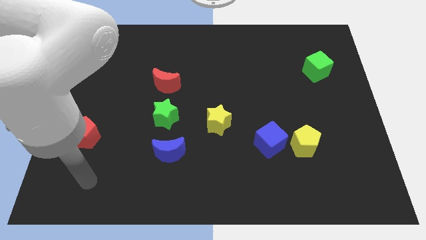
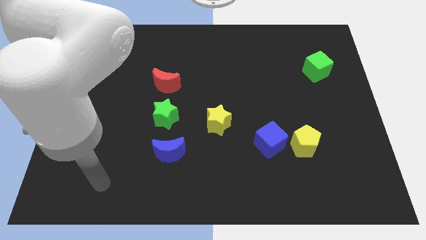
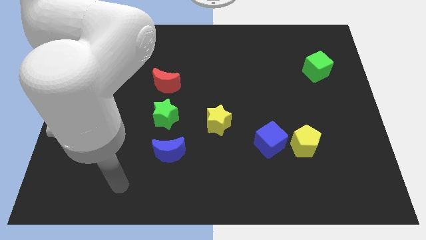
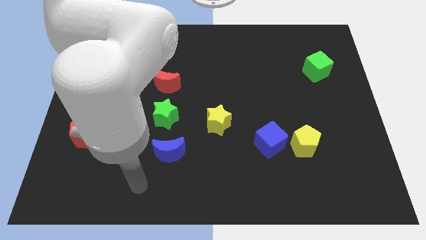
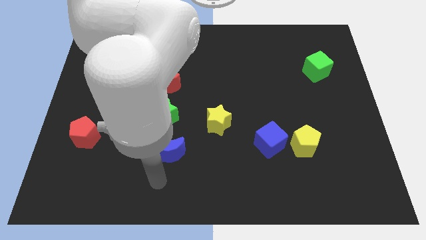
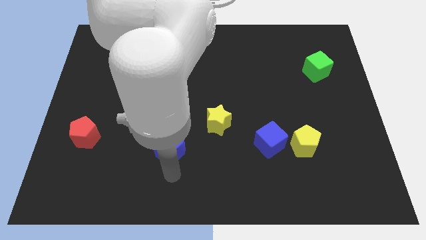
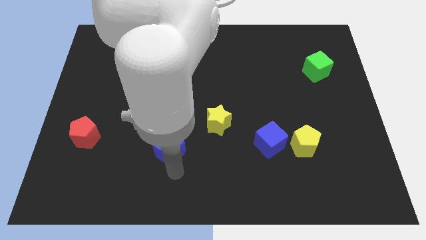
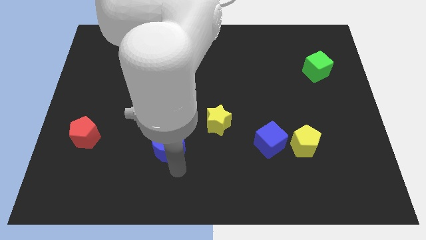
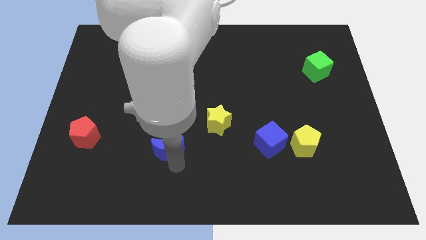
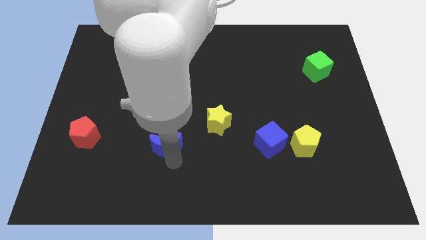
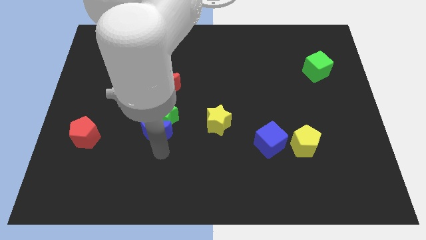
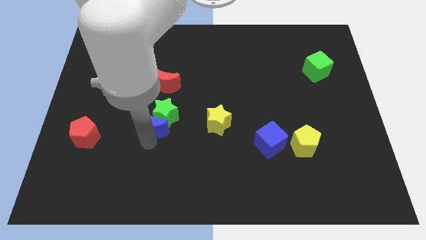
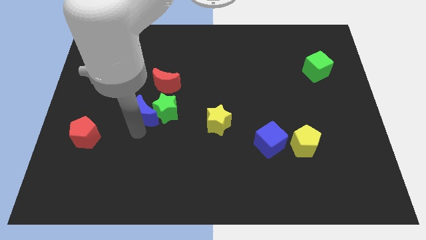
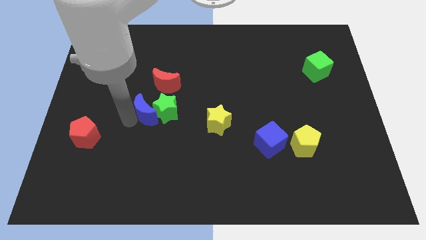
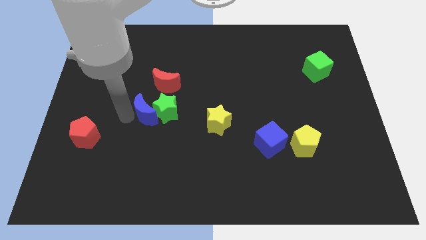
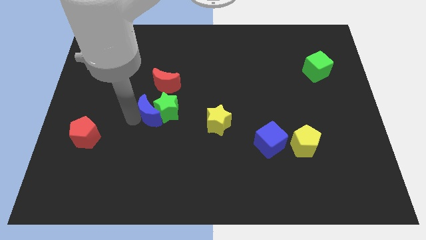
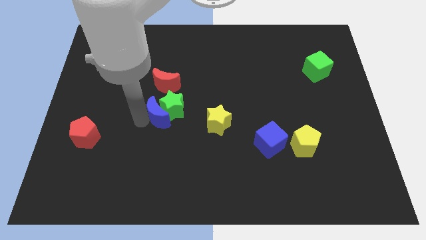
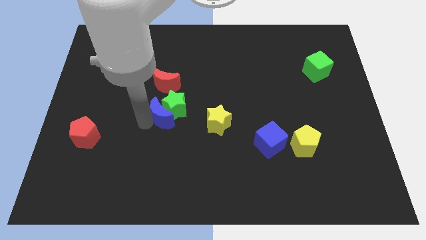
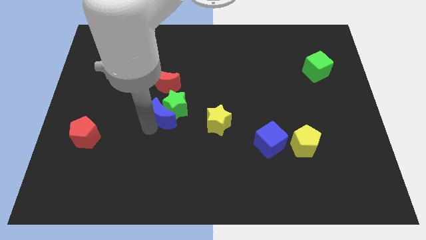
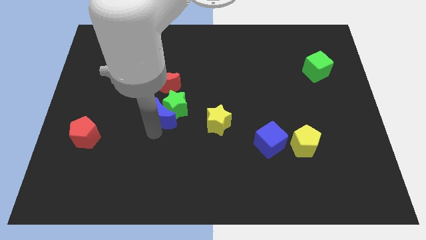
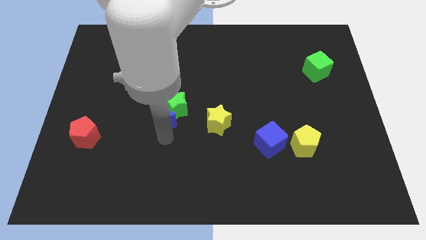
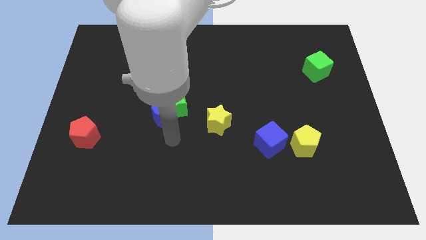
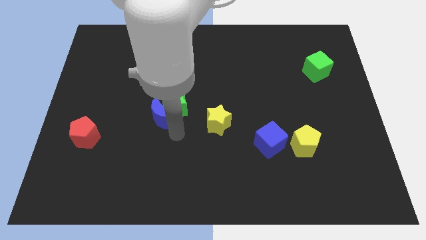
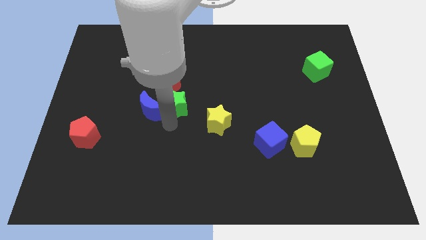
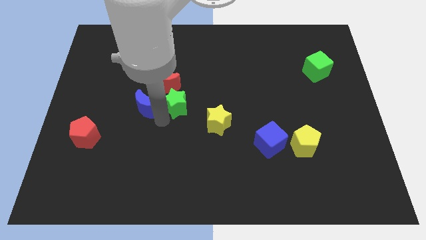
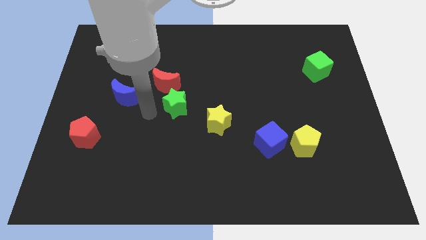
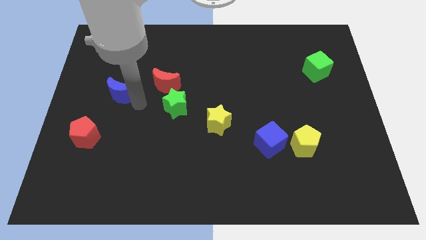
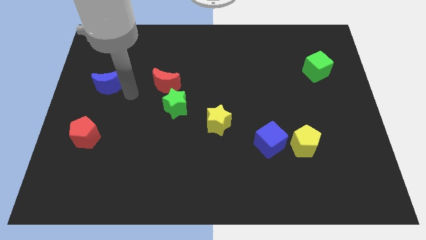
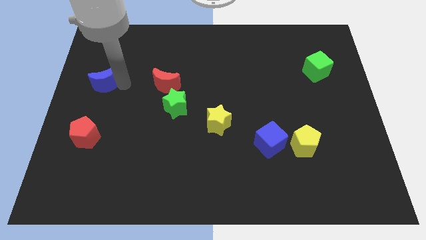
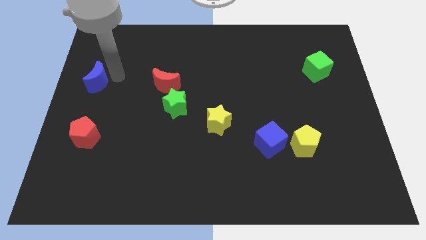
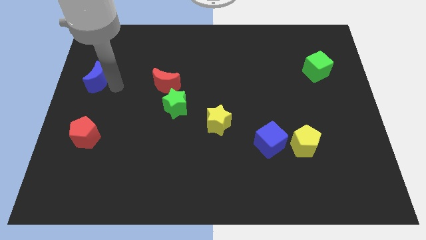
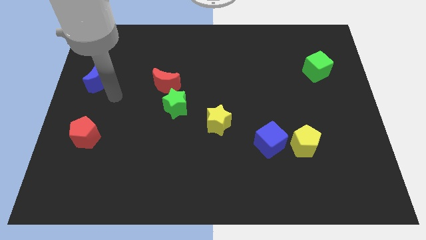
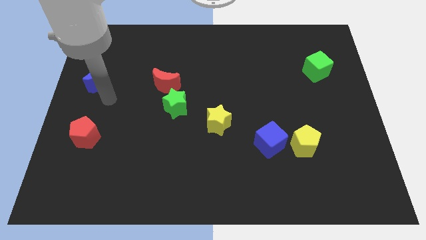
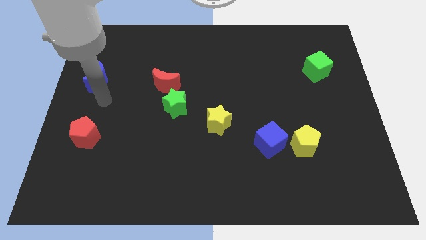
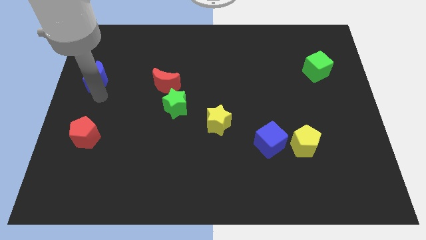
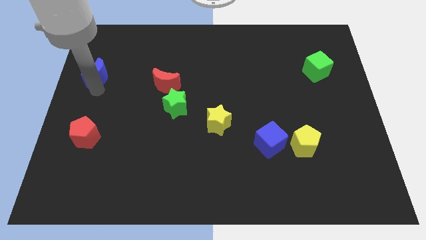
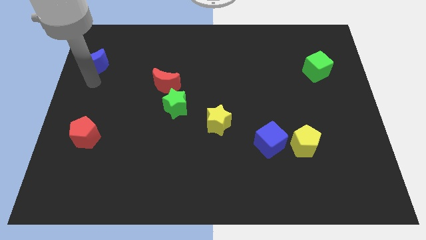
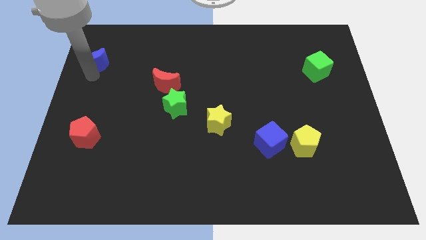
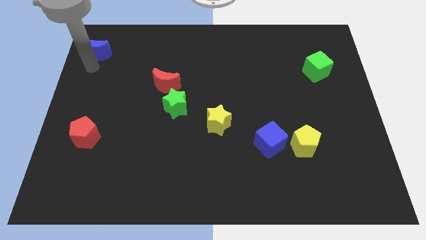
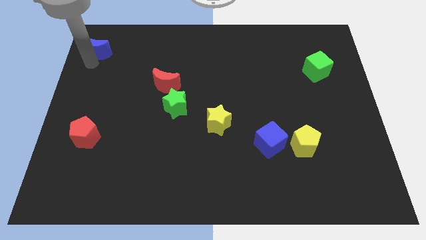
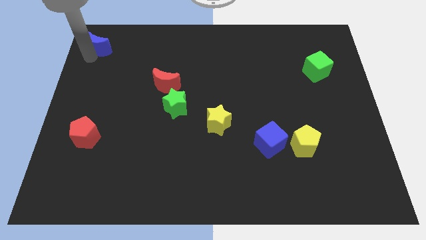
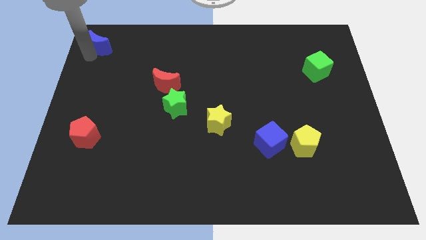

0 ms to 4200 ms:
push the blue moon towards the top left corner of the board

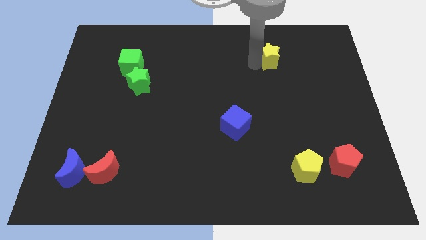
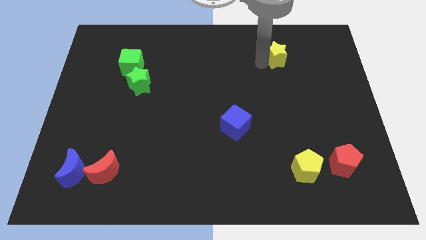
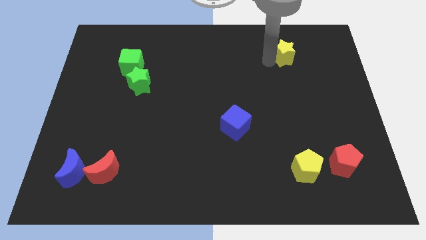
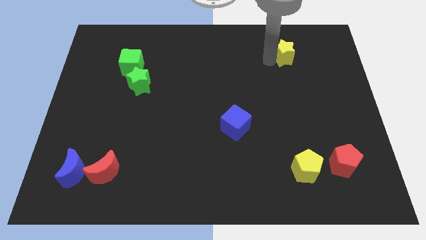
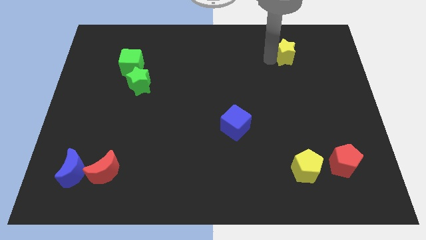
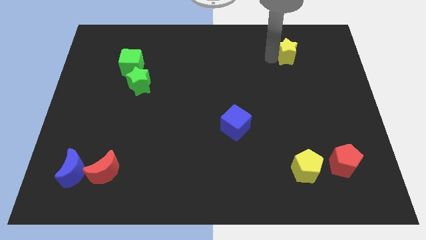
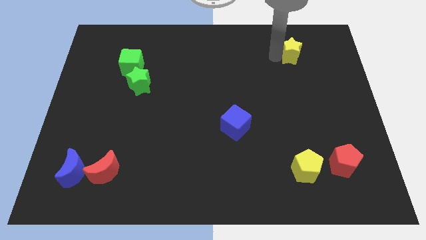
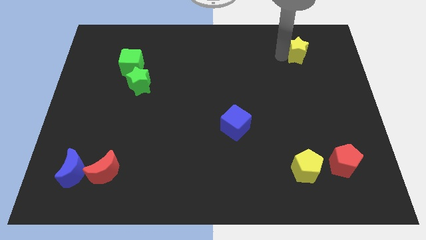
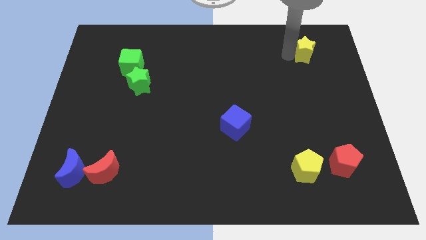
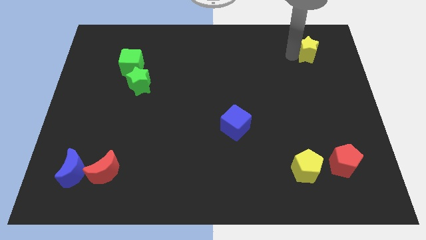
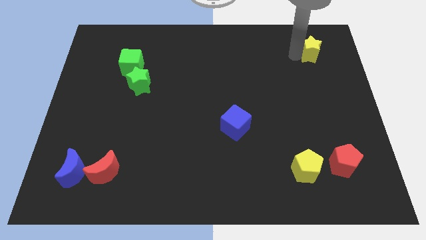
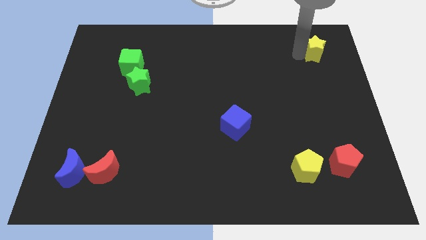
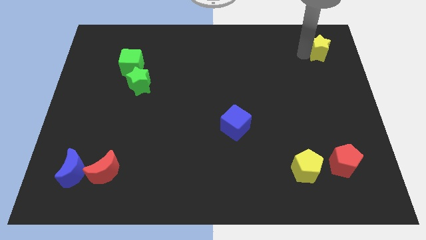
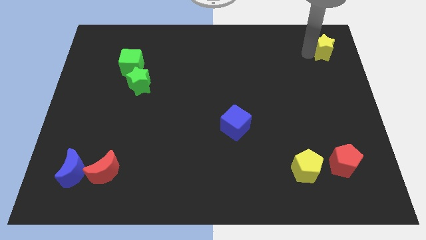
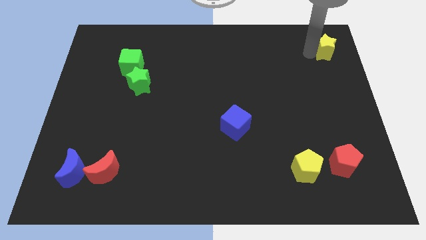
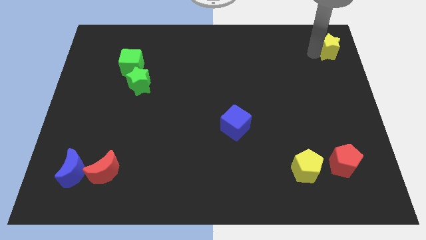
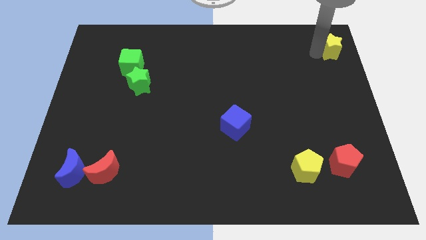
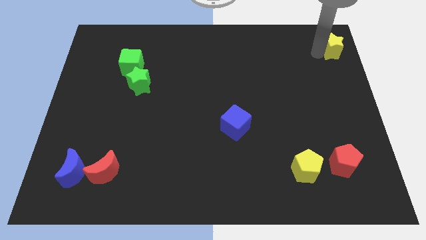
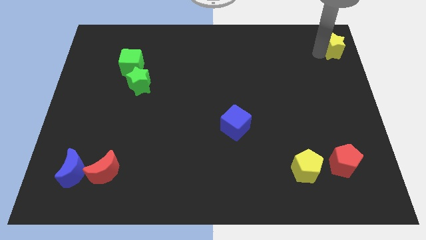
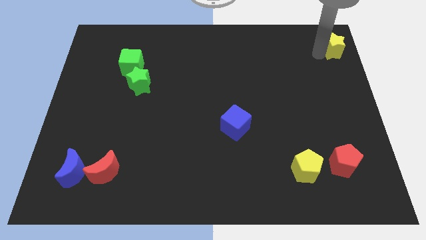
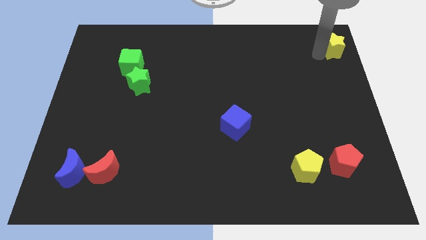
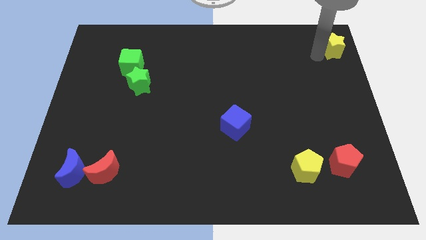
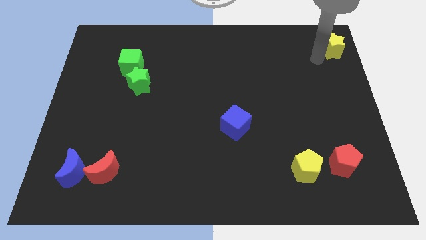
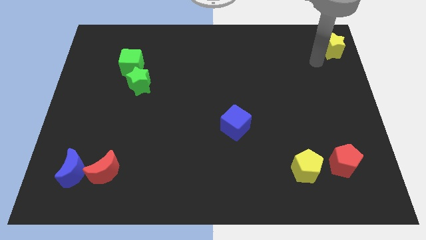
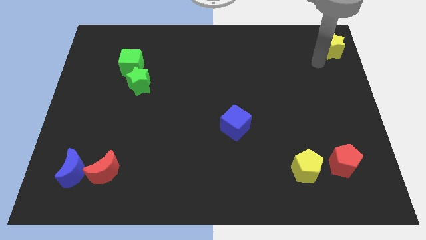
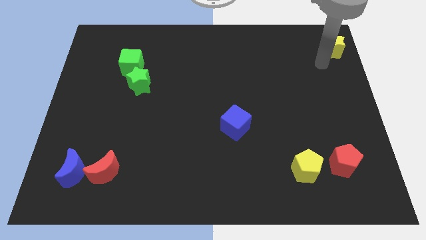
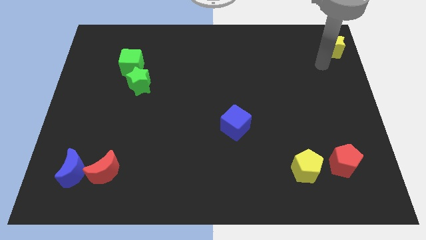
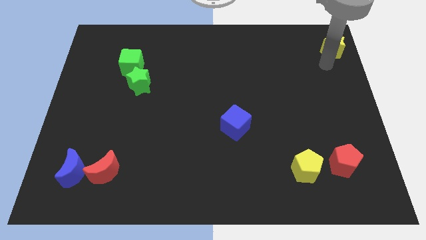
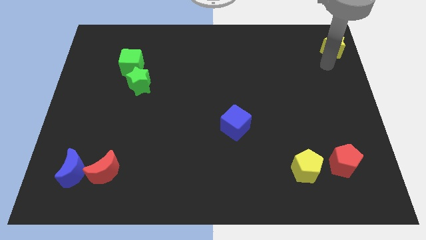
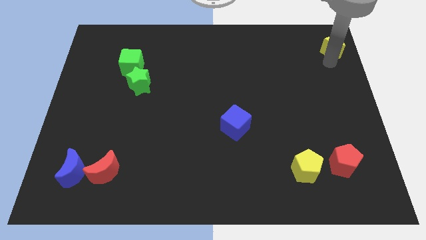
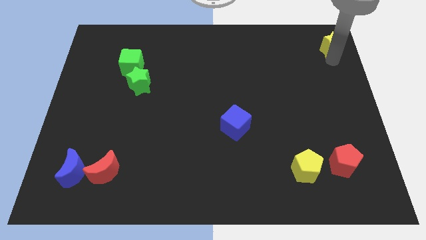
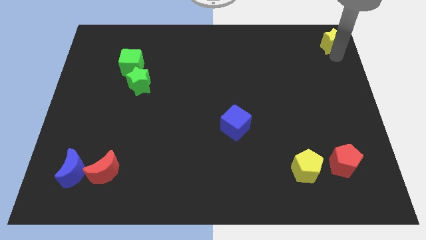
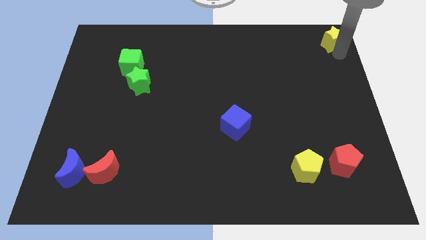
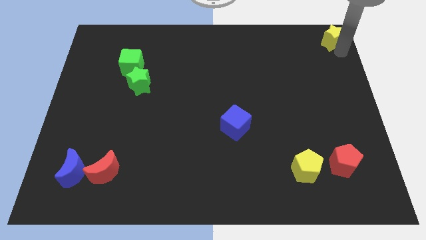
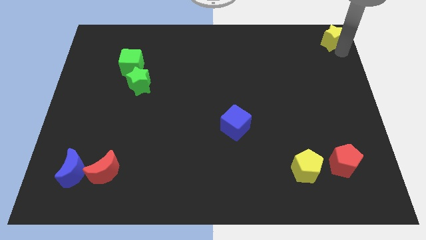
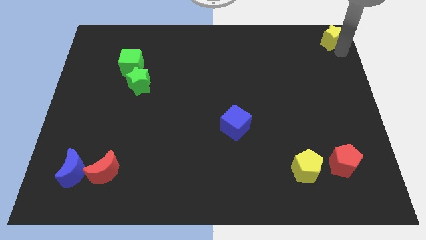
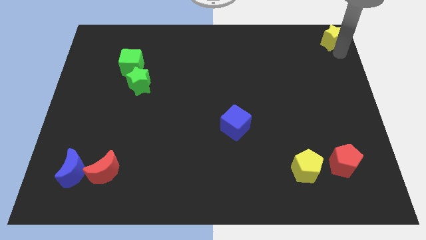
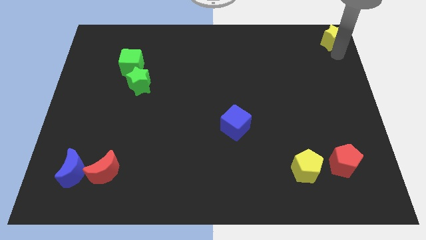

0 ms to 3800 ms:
place the yellow star to the top right corner

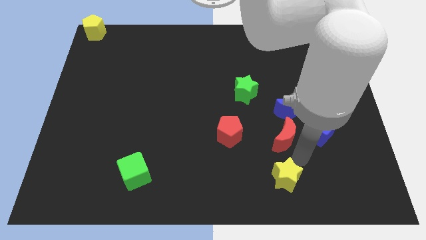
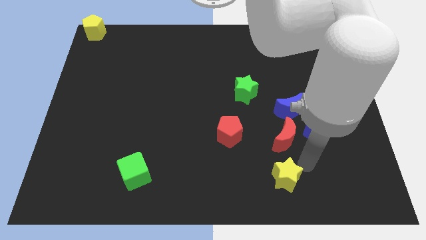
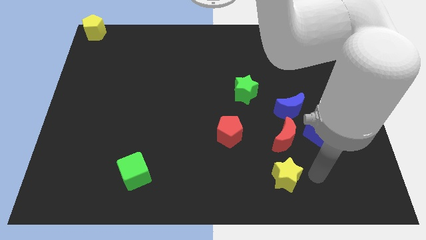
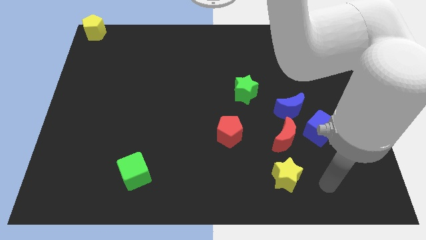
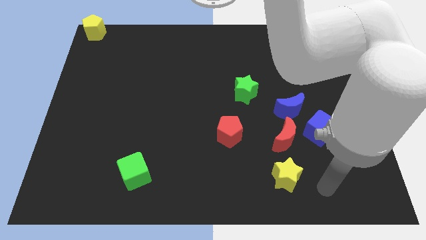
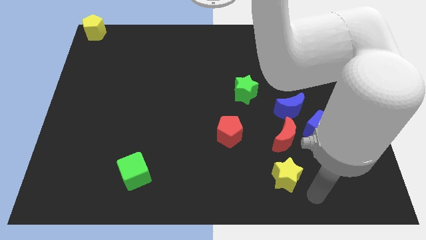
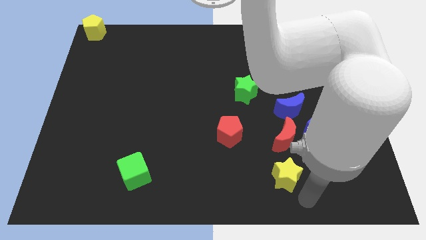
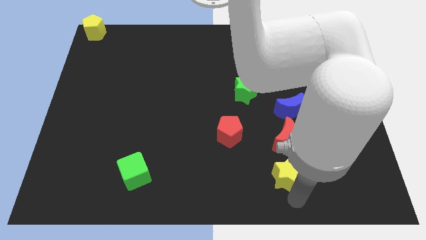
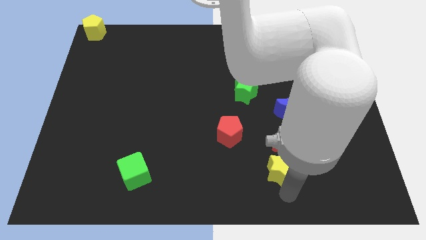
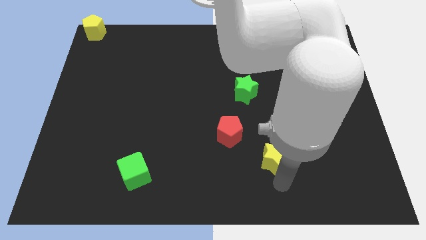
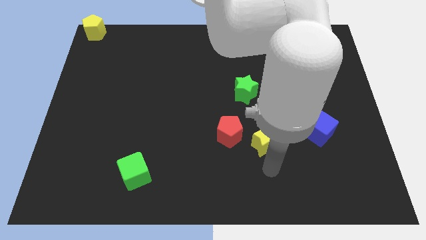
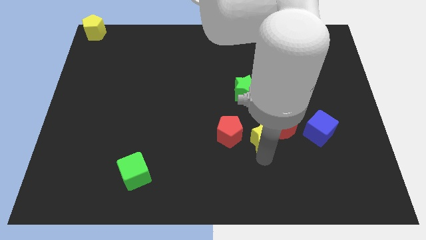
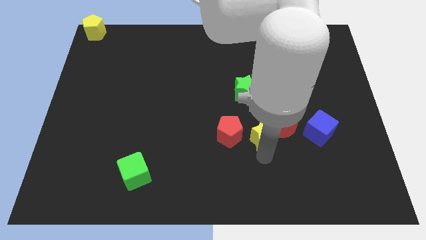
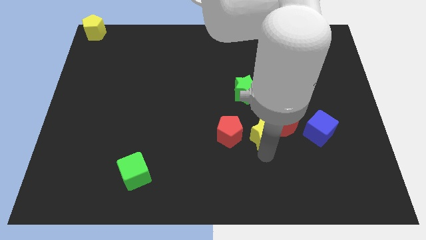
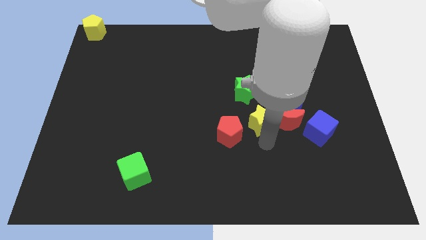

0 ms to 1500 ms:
push the yellow star closer to the red crescent
